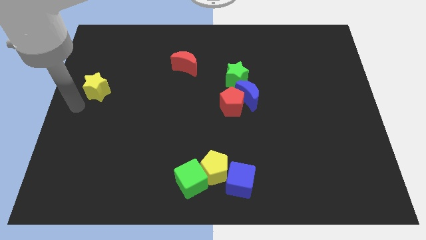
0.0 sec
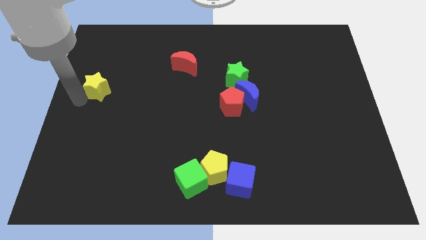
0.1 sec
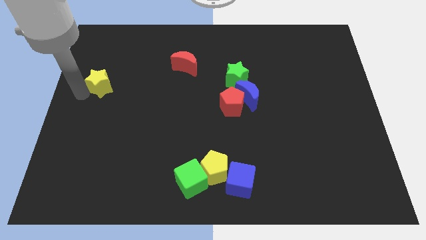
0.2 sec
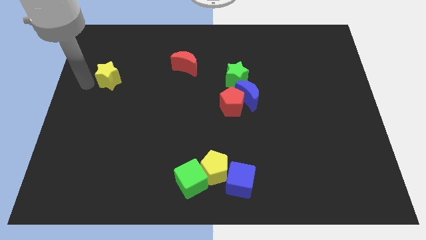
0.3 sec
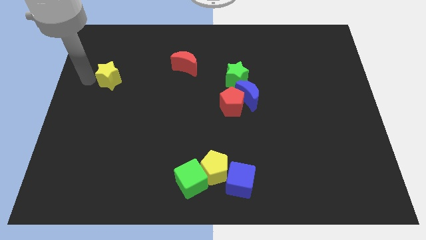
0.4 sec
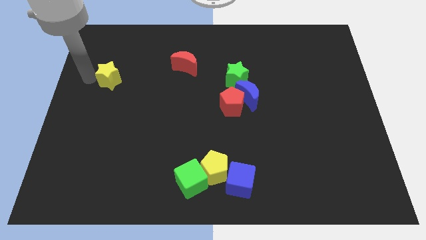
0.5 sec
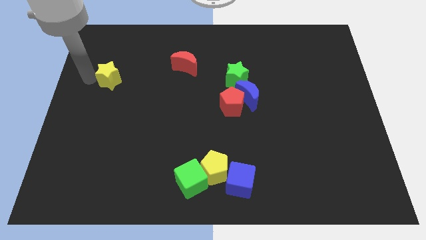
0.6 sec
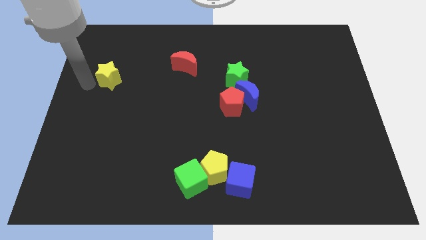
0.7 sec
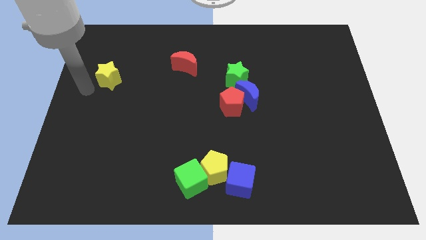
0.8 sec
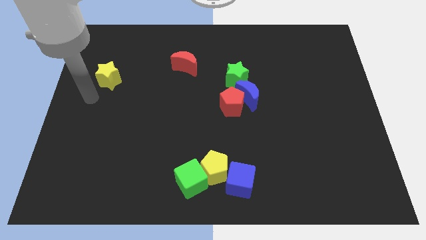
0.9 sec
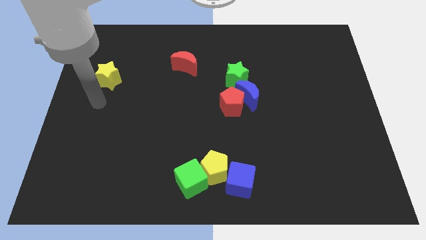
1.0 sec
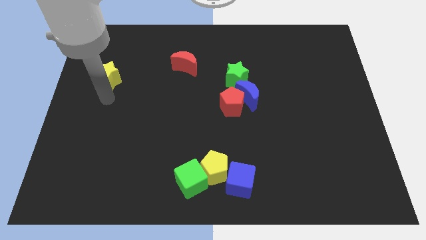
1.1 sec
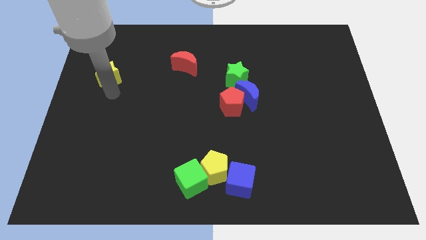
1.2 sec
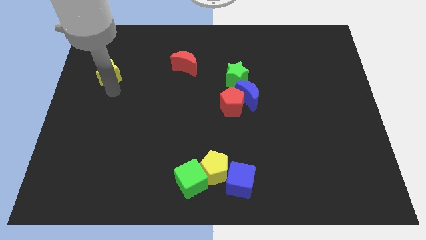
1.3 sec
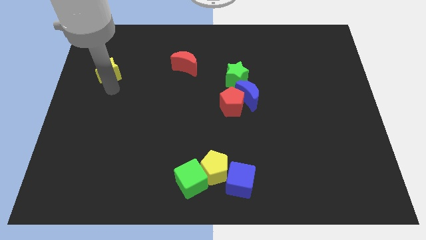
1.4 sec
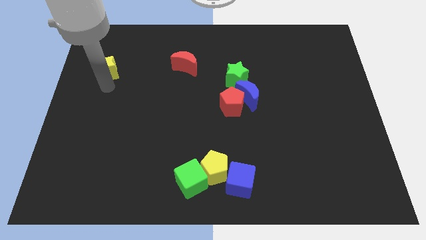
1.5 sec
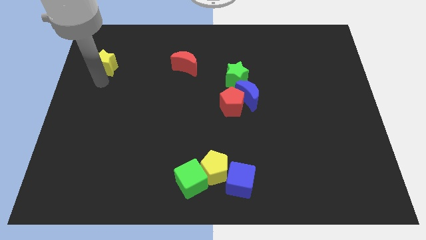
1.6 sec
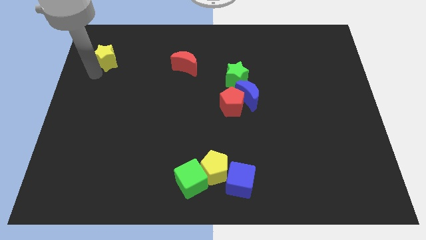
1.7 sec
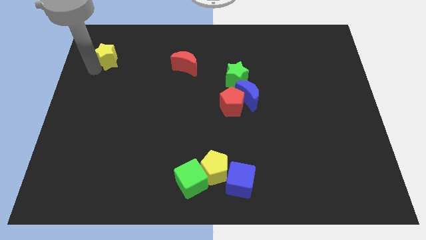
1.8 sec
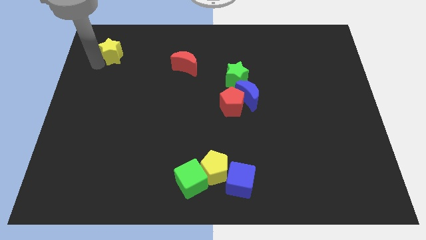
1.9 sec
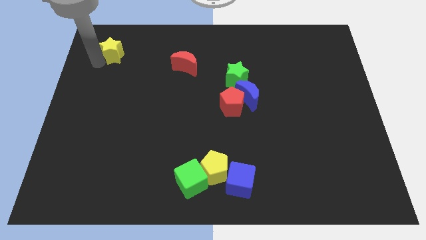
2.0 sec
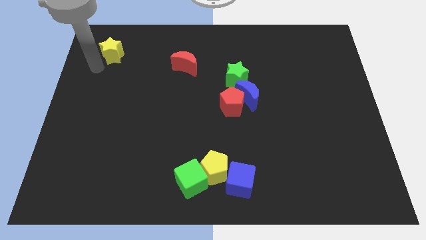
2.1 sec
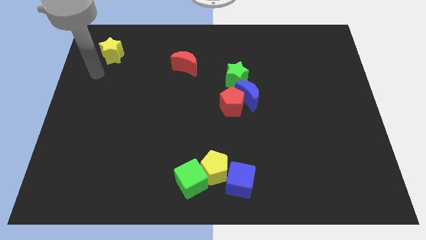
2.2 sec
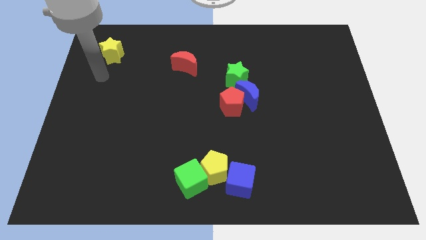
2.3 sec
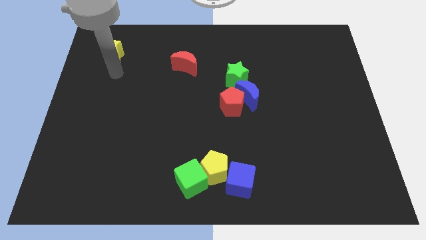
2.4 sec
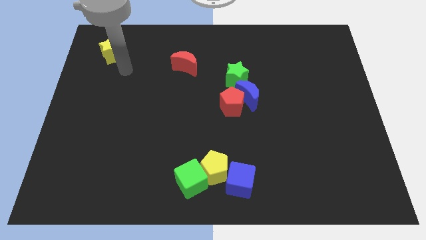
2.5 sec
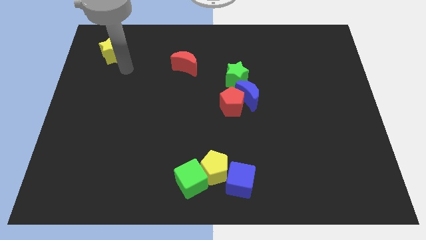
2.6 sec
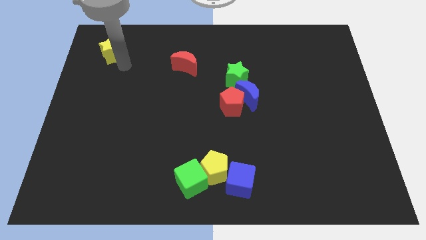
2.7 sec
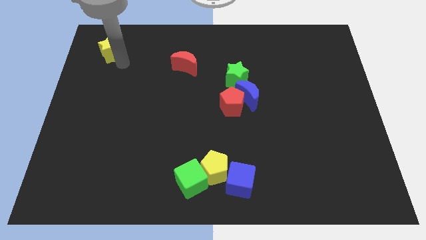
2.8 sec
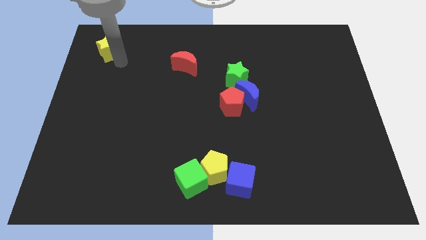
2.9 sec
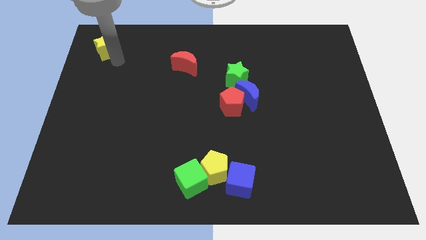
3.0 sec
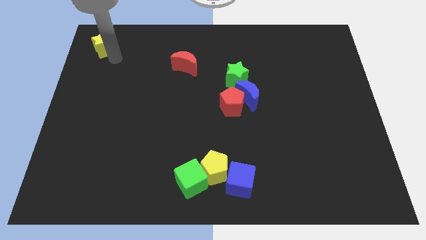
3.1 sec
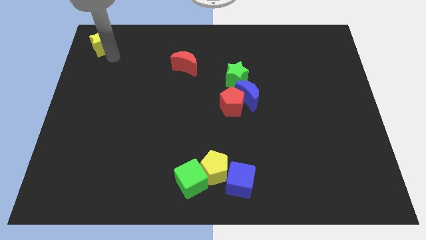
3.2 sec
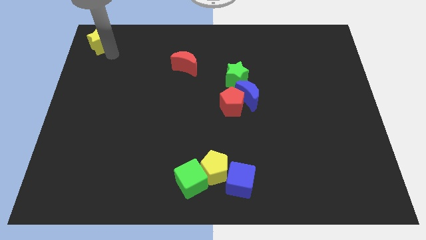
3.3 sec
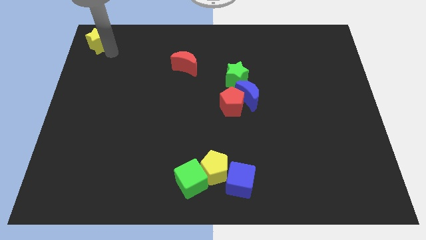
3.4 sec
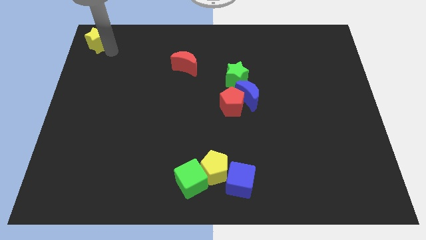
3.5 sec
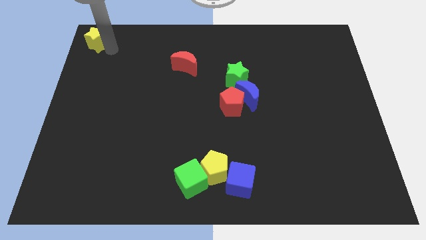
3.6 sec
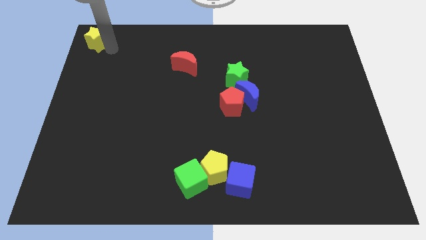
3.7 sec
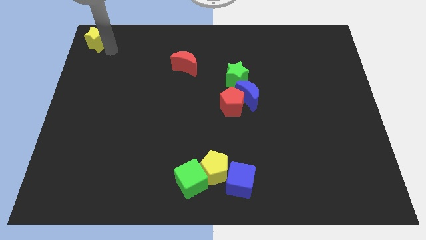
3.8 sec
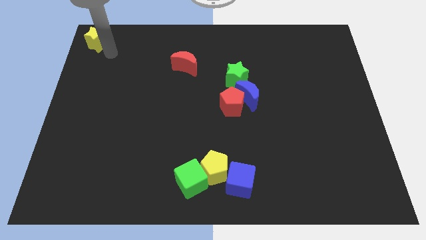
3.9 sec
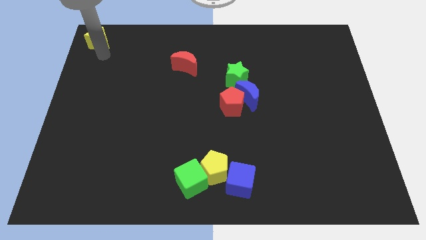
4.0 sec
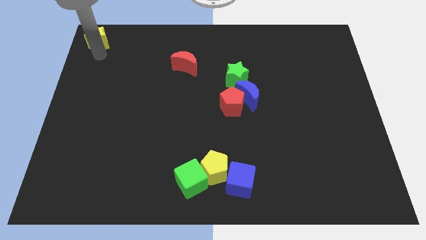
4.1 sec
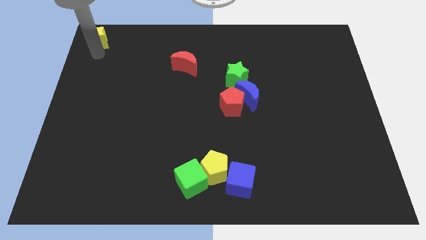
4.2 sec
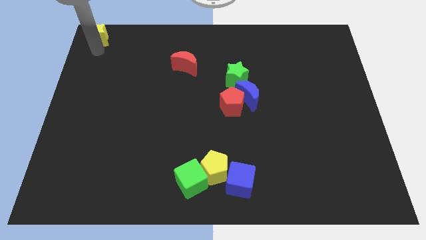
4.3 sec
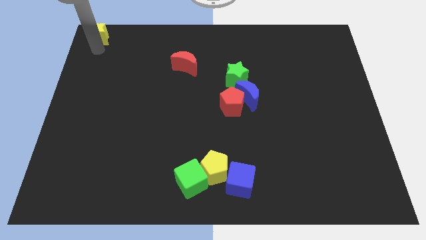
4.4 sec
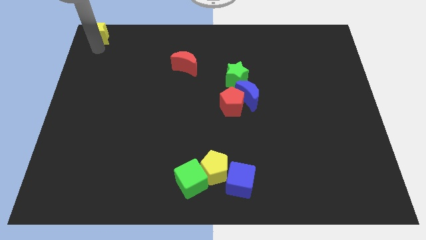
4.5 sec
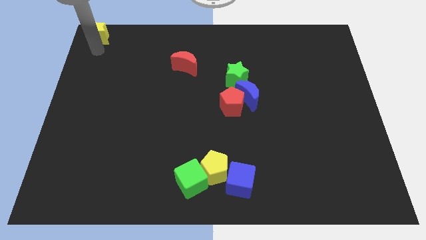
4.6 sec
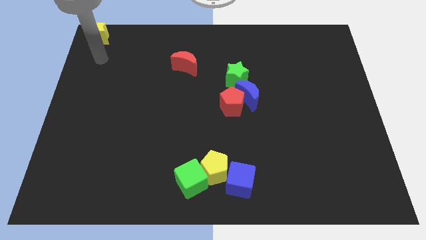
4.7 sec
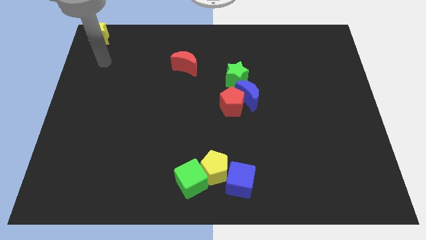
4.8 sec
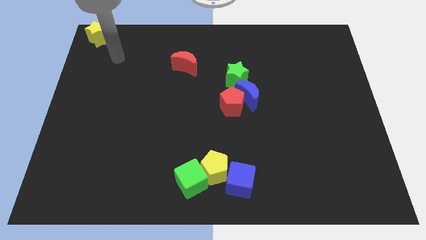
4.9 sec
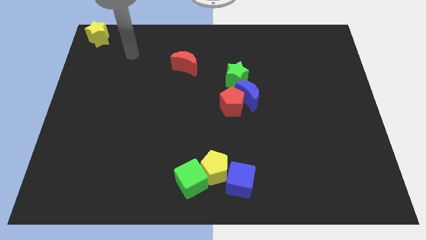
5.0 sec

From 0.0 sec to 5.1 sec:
move the yellow star to the top left corner

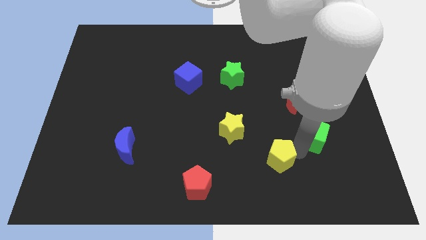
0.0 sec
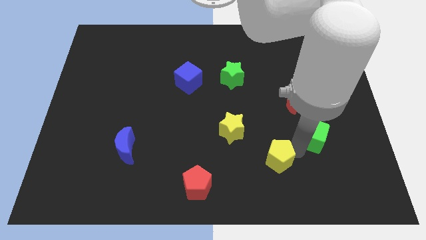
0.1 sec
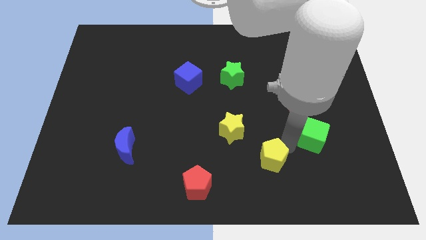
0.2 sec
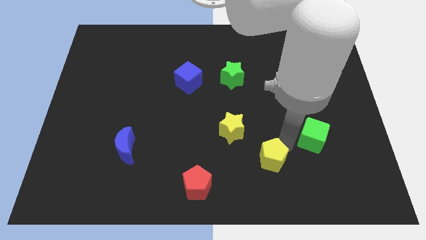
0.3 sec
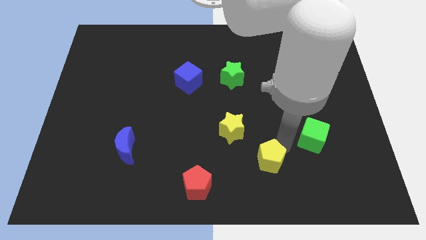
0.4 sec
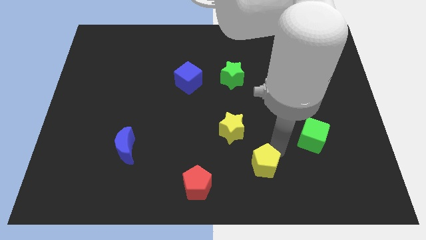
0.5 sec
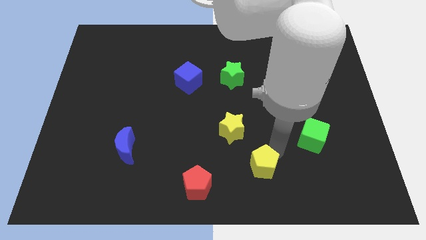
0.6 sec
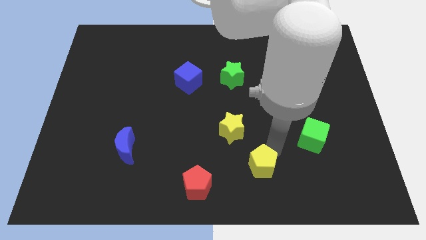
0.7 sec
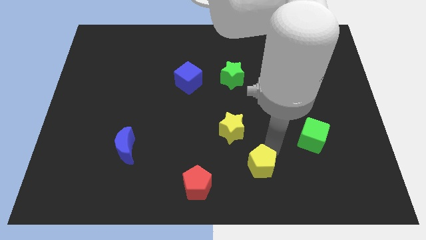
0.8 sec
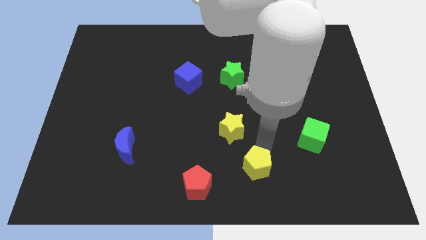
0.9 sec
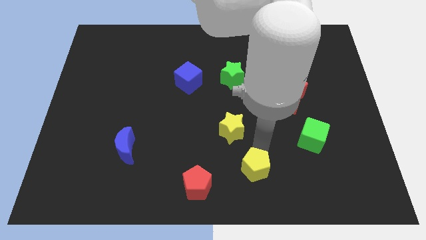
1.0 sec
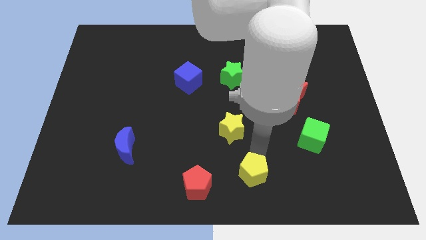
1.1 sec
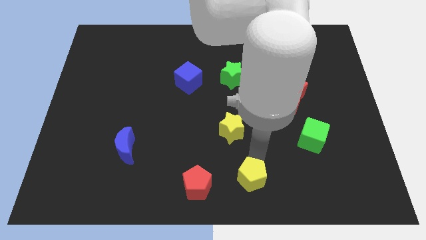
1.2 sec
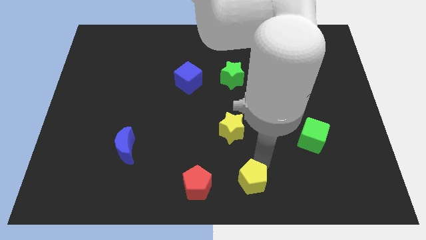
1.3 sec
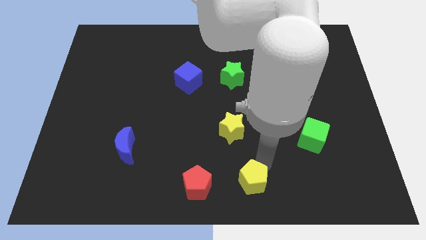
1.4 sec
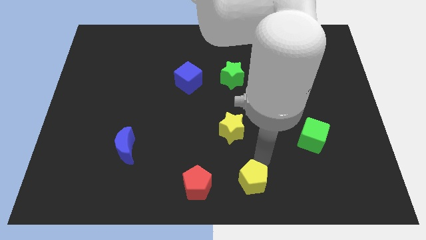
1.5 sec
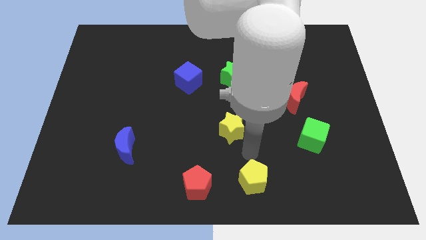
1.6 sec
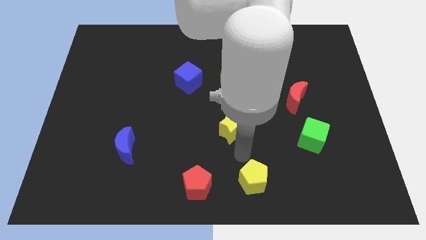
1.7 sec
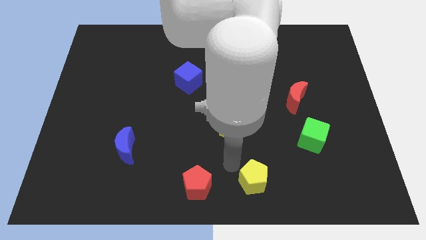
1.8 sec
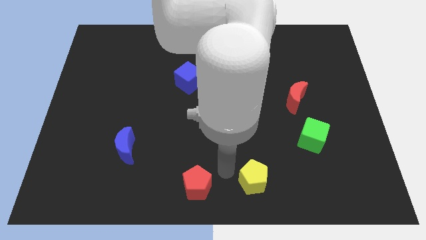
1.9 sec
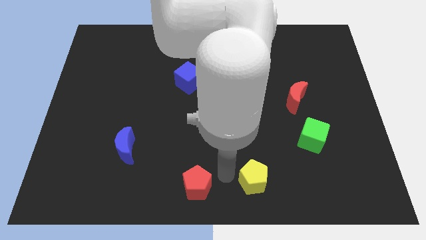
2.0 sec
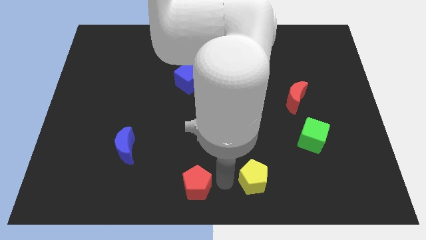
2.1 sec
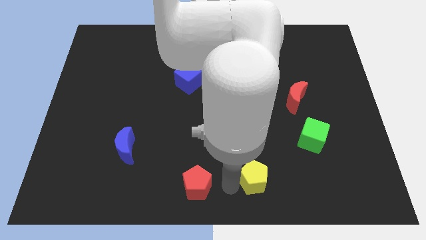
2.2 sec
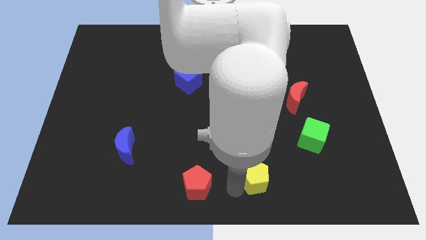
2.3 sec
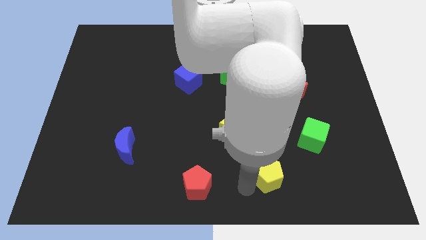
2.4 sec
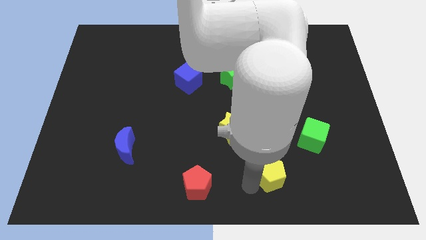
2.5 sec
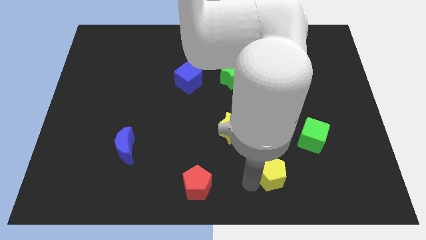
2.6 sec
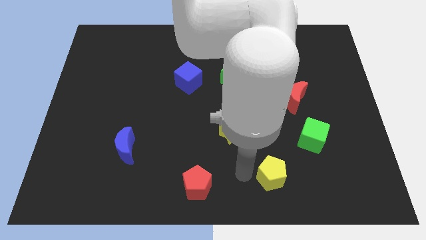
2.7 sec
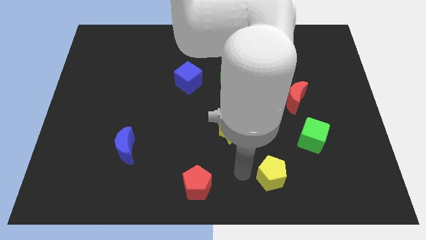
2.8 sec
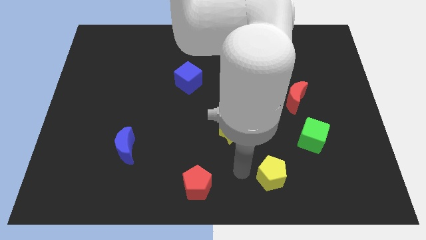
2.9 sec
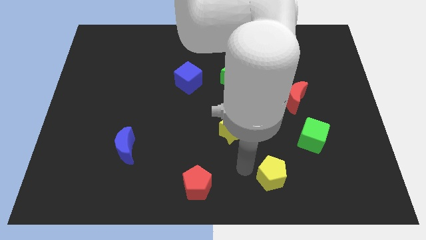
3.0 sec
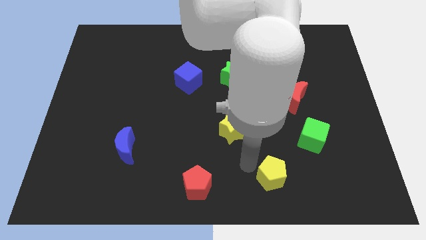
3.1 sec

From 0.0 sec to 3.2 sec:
place yellow pentagon to the right of red pentagon

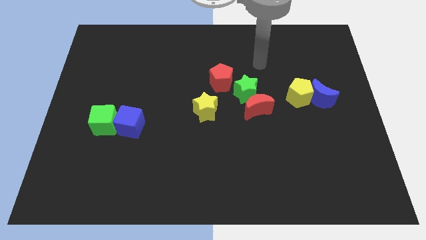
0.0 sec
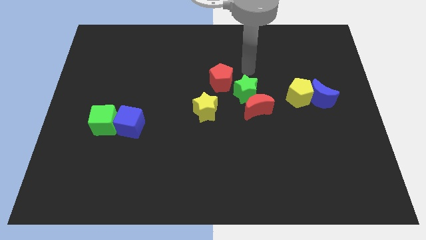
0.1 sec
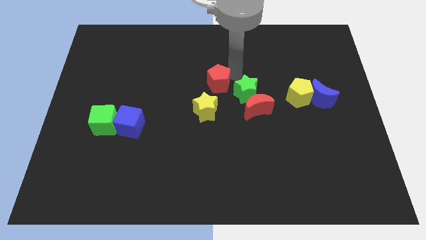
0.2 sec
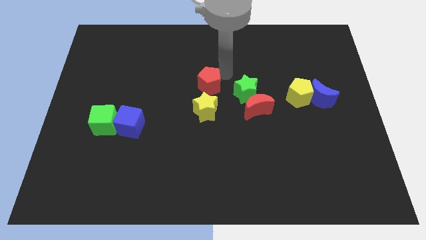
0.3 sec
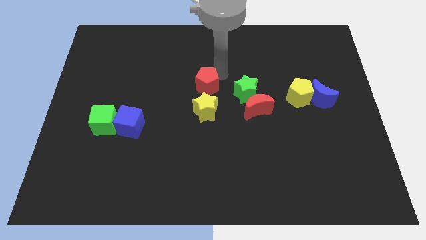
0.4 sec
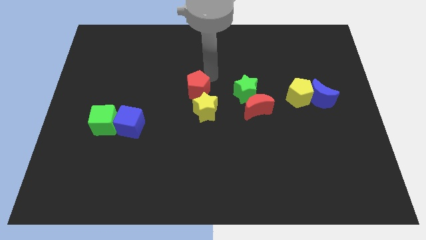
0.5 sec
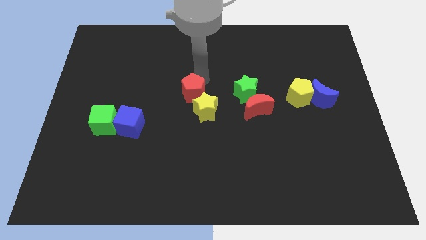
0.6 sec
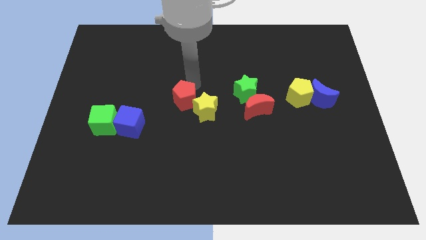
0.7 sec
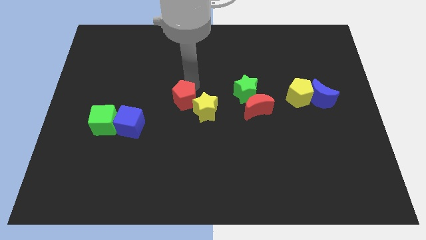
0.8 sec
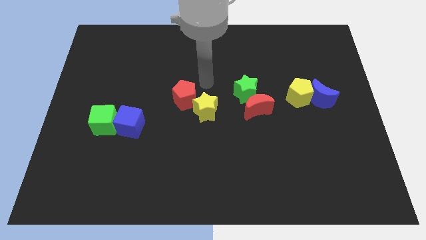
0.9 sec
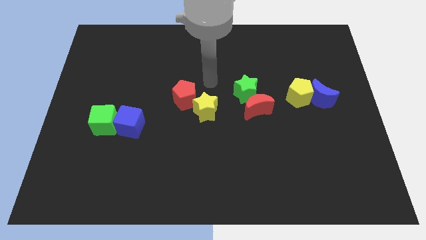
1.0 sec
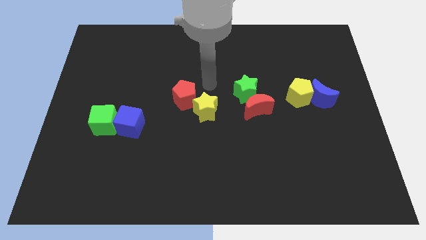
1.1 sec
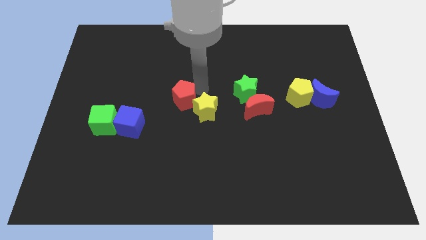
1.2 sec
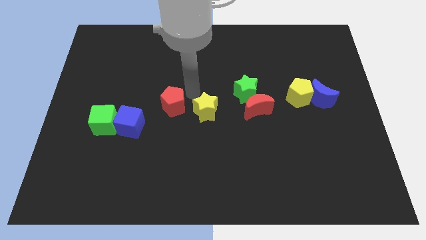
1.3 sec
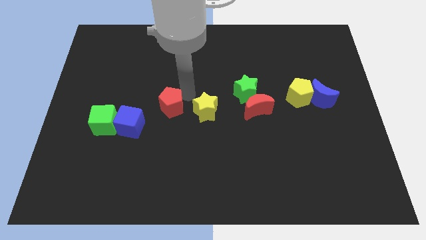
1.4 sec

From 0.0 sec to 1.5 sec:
place the red pentagon to the left of the yellow star
